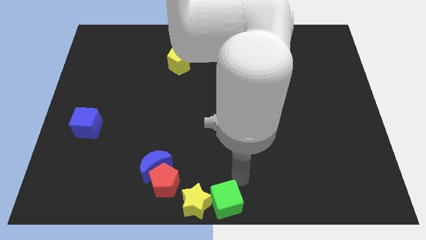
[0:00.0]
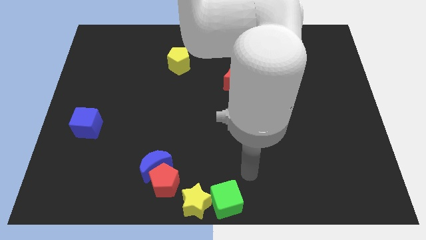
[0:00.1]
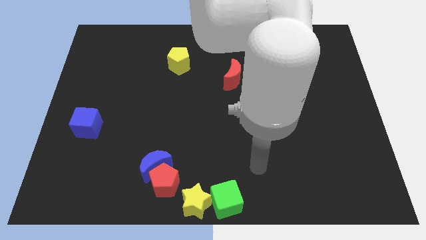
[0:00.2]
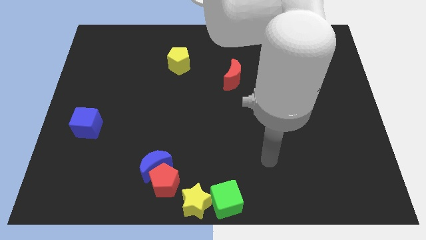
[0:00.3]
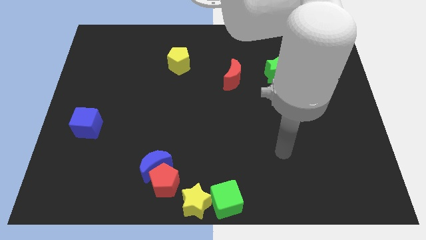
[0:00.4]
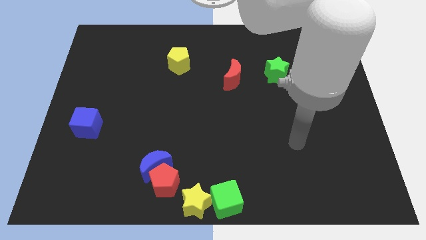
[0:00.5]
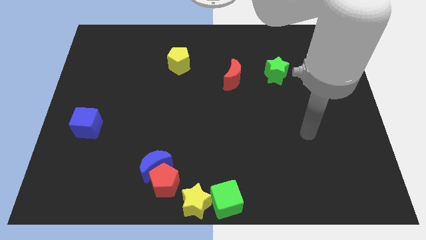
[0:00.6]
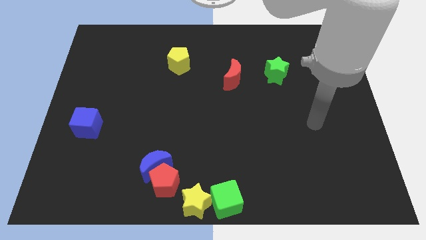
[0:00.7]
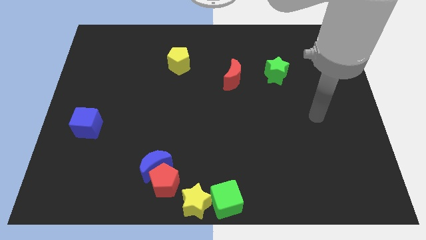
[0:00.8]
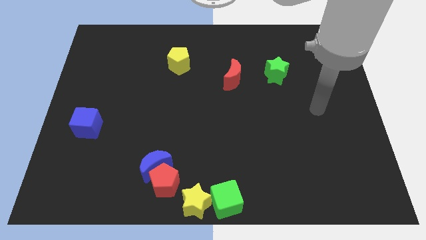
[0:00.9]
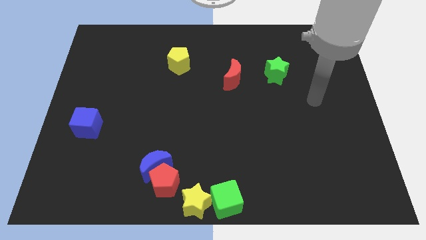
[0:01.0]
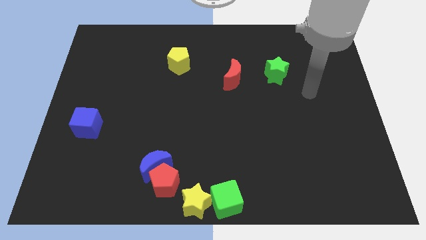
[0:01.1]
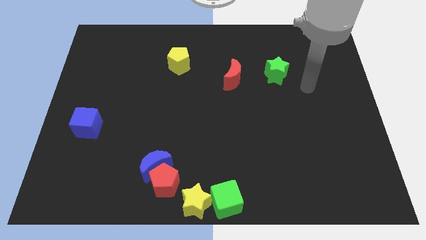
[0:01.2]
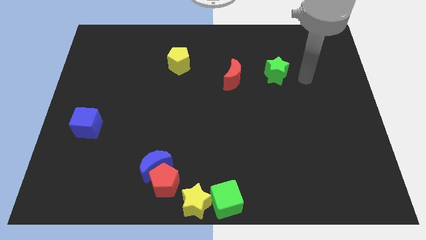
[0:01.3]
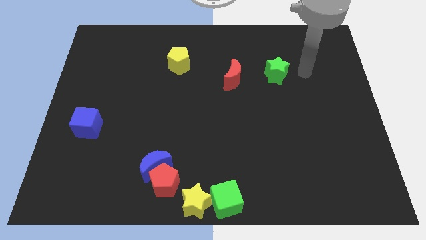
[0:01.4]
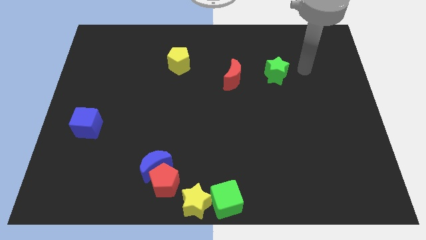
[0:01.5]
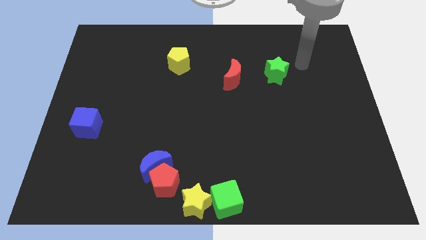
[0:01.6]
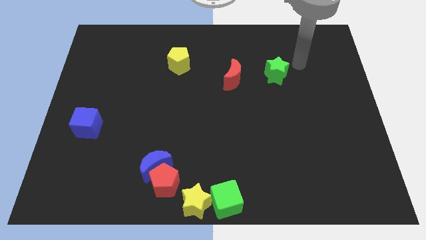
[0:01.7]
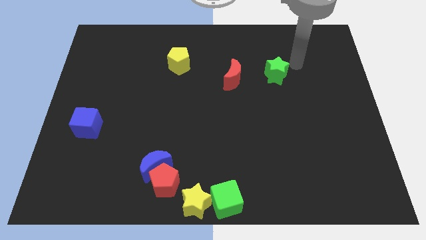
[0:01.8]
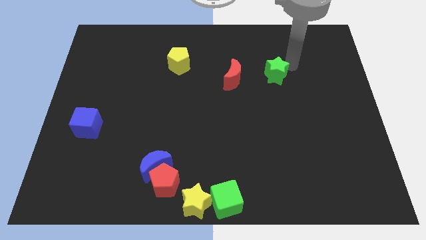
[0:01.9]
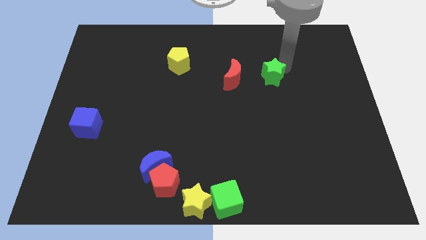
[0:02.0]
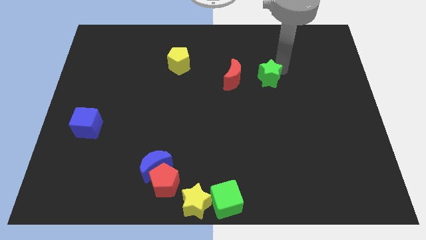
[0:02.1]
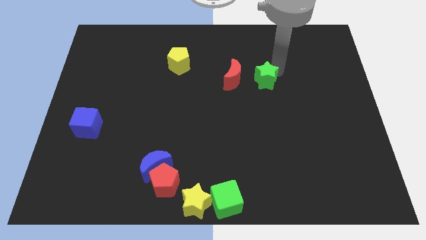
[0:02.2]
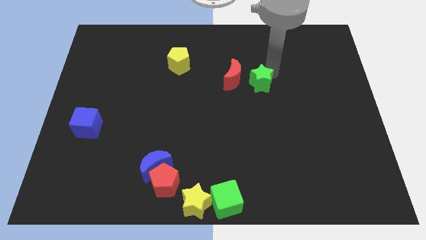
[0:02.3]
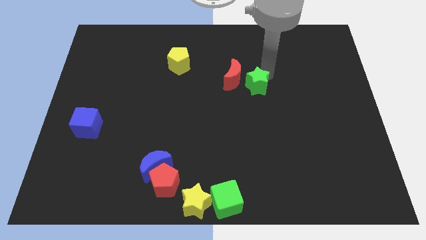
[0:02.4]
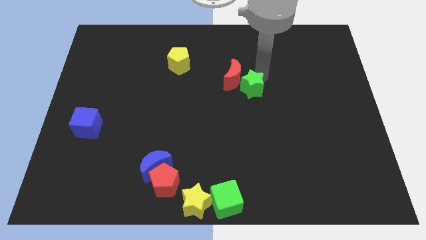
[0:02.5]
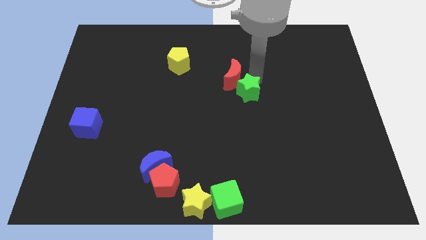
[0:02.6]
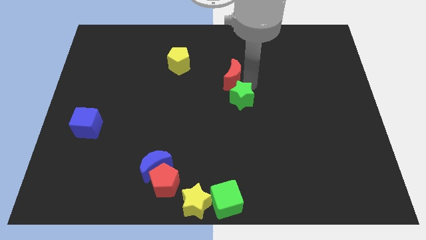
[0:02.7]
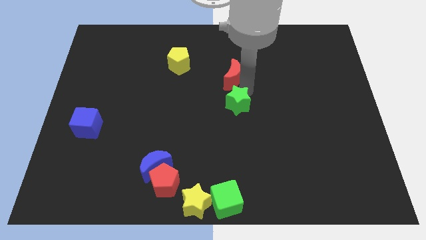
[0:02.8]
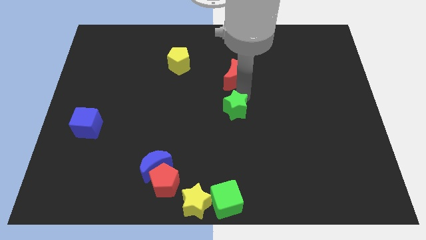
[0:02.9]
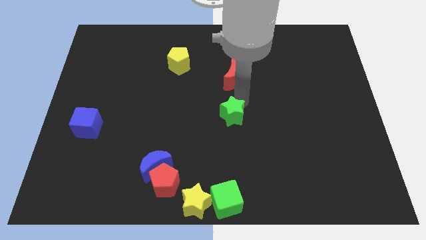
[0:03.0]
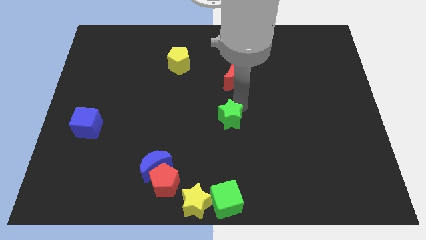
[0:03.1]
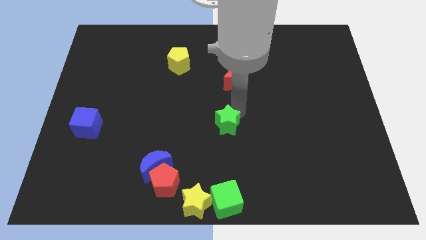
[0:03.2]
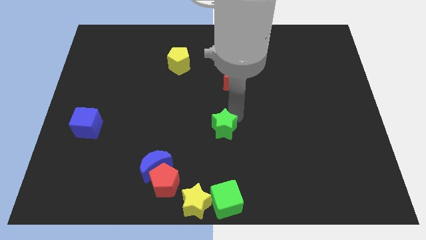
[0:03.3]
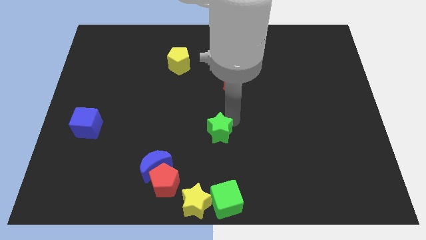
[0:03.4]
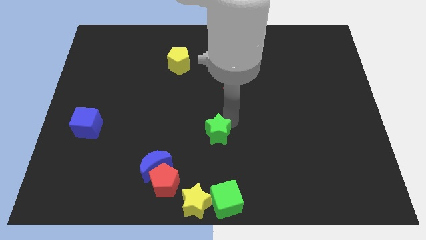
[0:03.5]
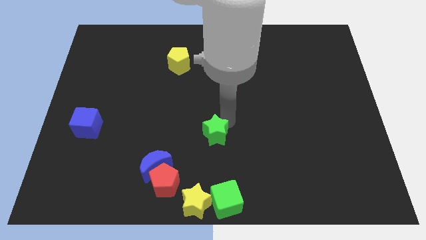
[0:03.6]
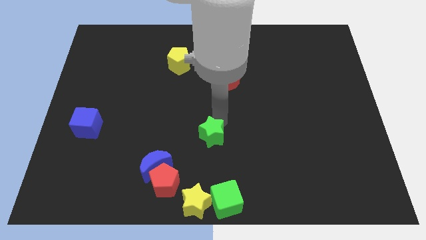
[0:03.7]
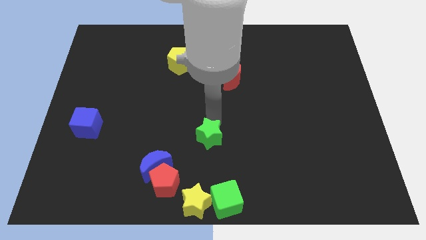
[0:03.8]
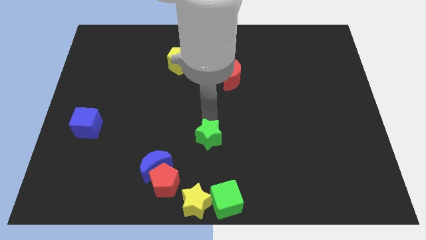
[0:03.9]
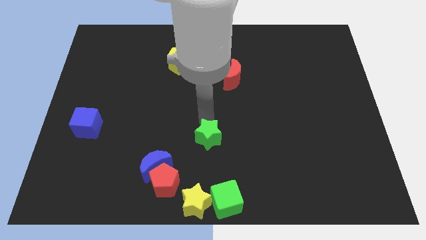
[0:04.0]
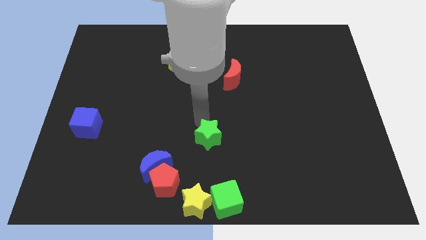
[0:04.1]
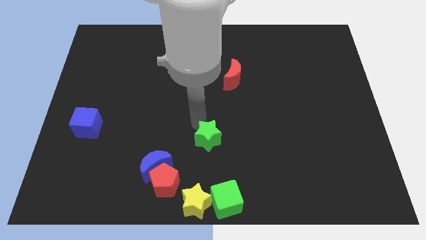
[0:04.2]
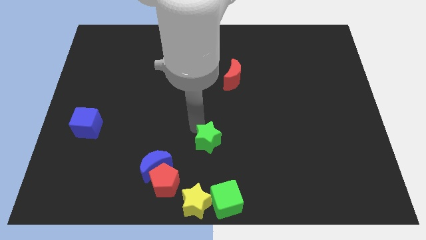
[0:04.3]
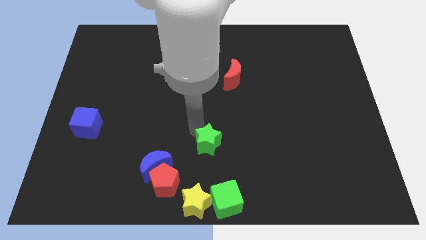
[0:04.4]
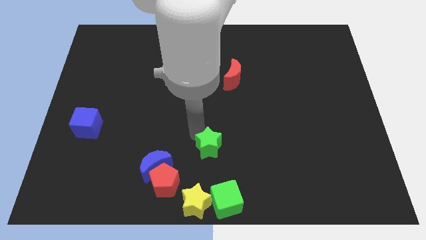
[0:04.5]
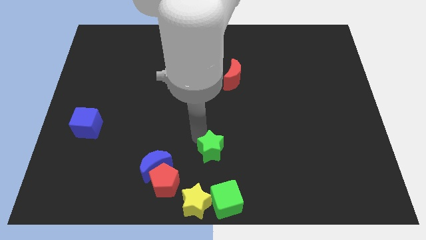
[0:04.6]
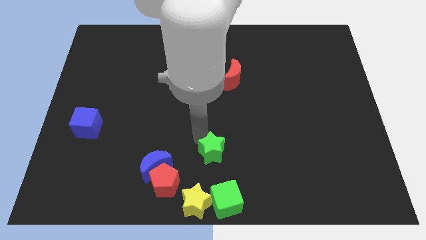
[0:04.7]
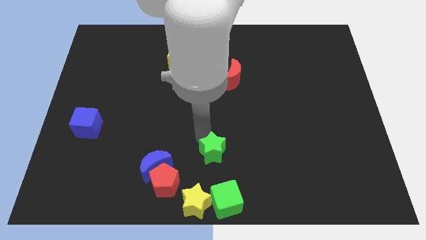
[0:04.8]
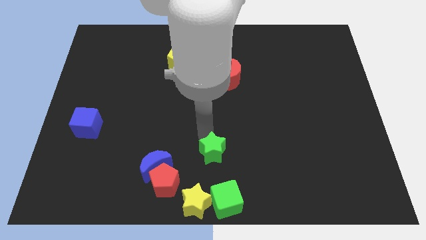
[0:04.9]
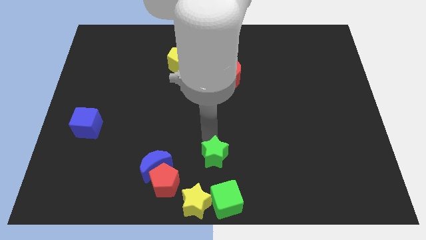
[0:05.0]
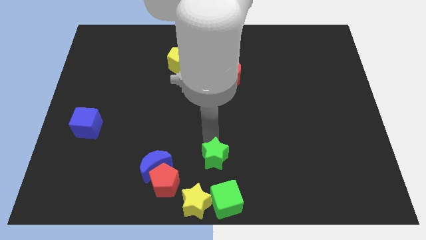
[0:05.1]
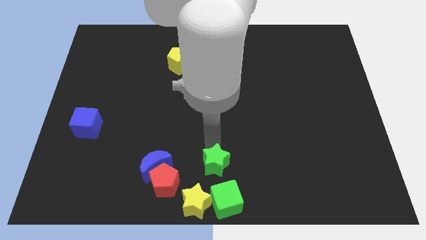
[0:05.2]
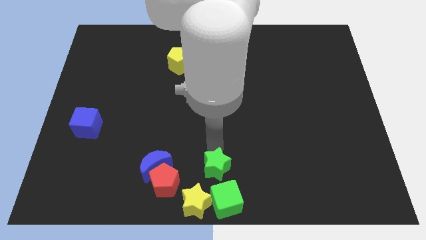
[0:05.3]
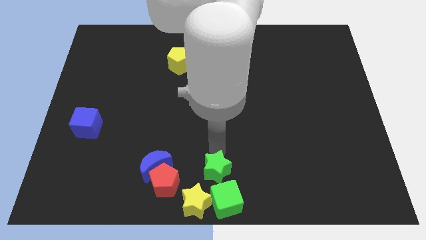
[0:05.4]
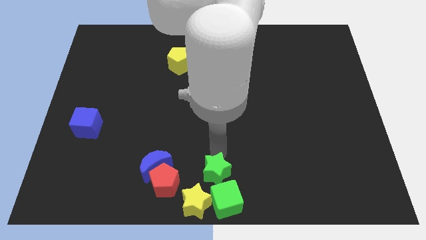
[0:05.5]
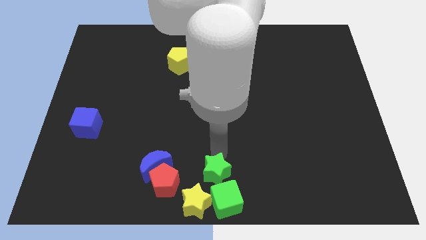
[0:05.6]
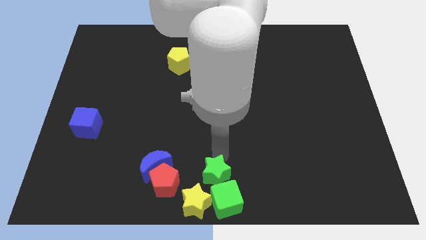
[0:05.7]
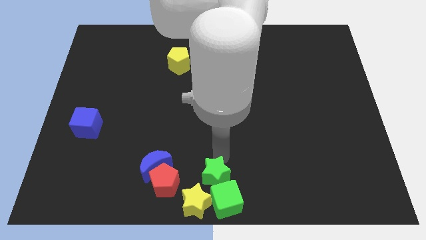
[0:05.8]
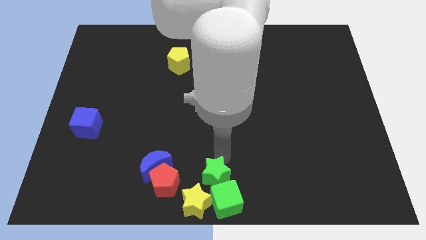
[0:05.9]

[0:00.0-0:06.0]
place the green star above to the green cube

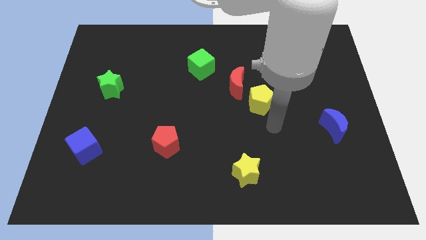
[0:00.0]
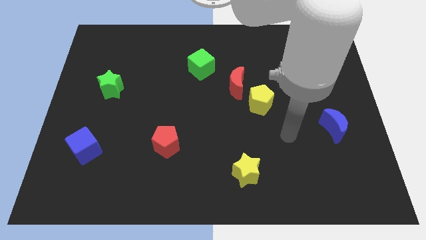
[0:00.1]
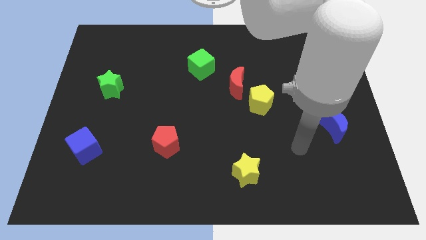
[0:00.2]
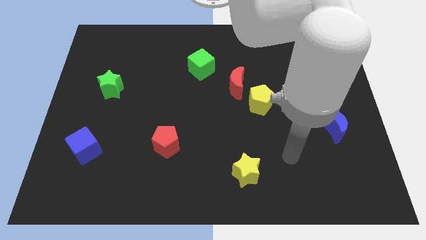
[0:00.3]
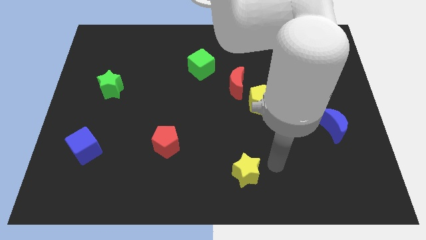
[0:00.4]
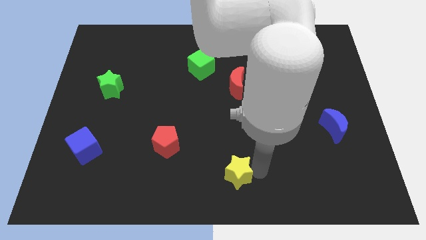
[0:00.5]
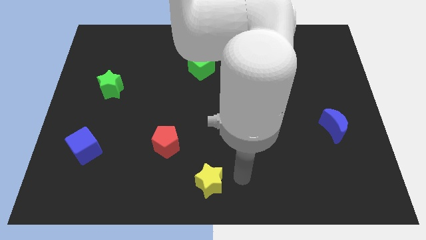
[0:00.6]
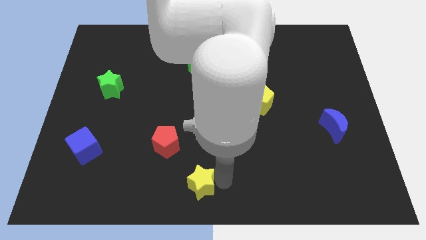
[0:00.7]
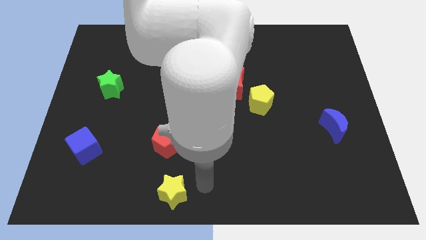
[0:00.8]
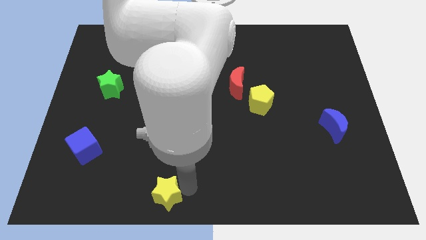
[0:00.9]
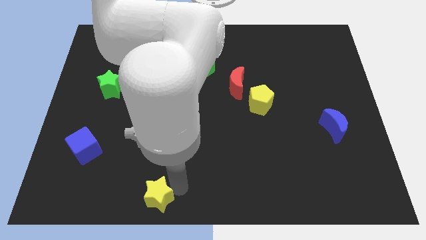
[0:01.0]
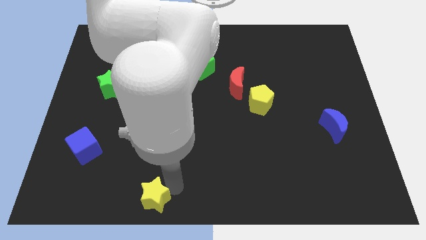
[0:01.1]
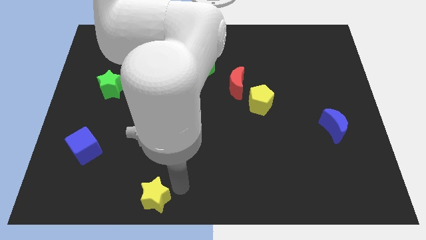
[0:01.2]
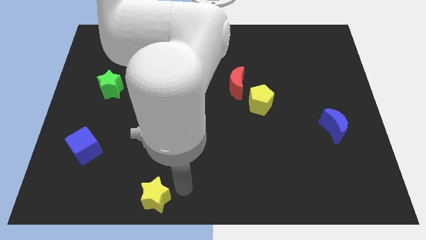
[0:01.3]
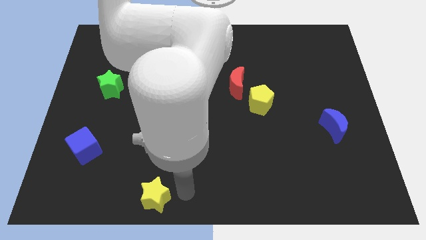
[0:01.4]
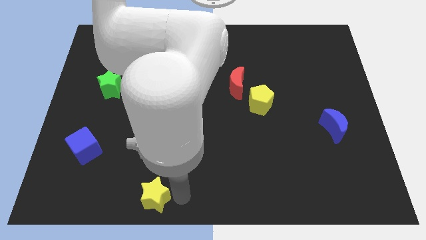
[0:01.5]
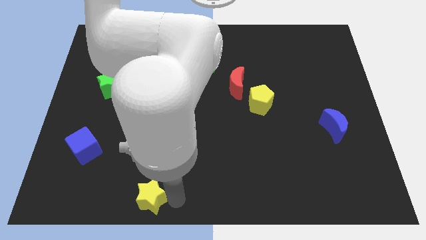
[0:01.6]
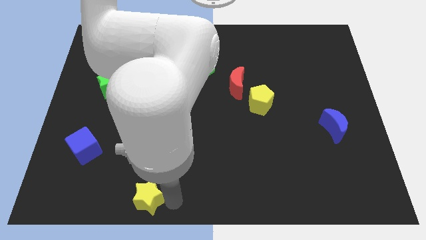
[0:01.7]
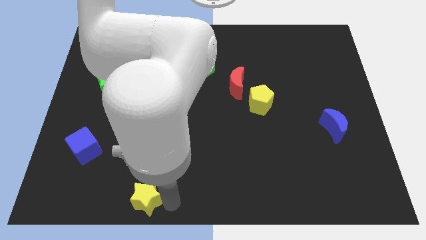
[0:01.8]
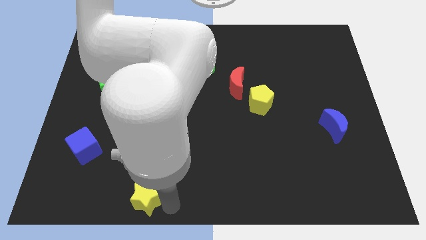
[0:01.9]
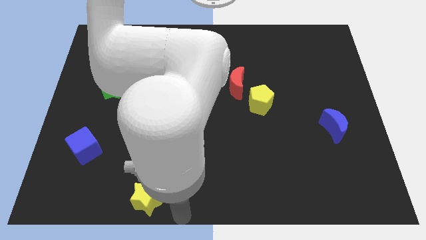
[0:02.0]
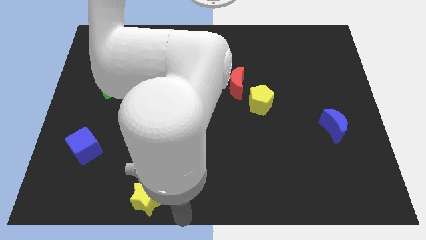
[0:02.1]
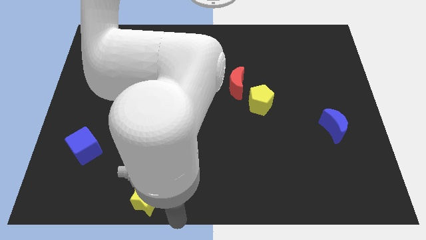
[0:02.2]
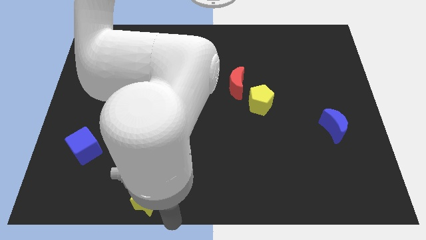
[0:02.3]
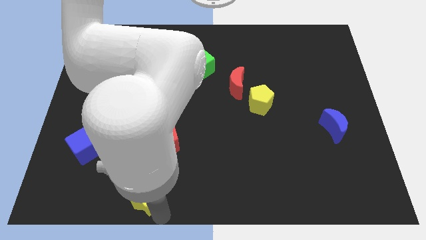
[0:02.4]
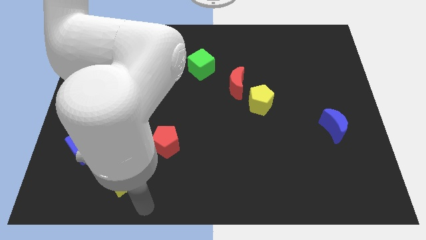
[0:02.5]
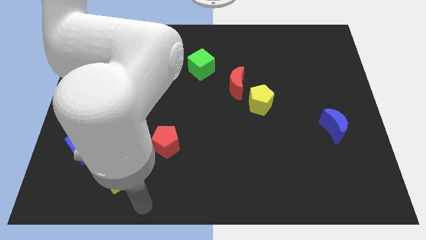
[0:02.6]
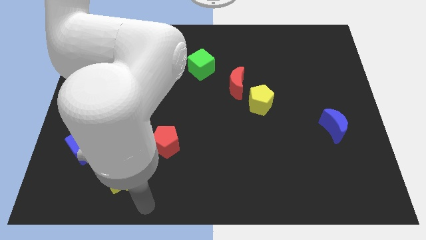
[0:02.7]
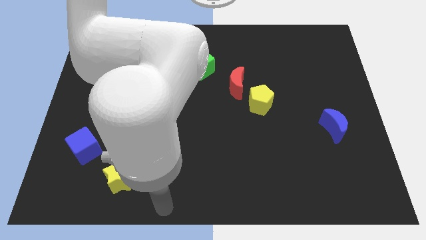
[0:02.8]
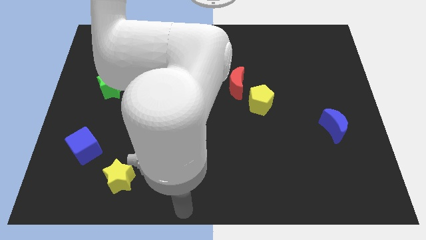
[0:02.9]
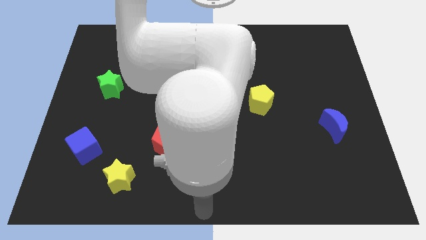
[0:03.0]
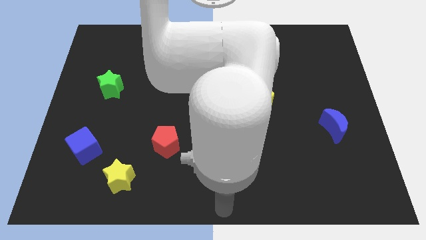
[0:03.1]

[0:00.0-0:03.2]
push the yellow star diagonally below the bottom right side of the blue cube
